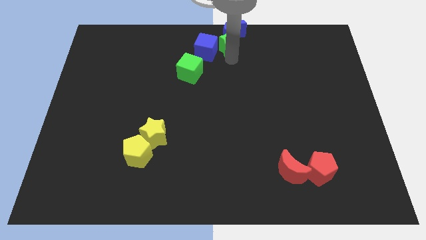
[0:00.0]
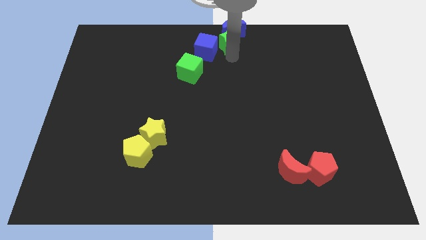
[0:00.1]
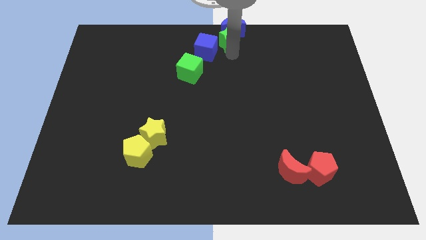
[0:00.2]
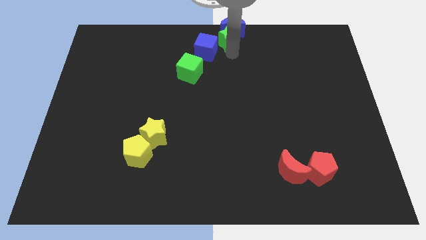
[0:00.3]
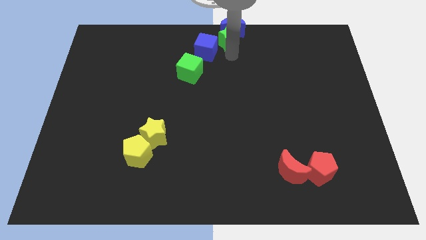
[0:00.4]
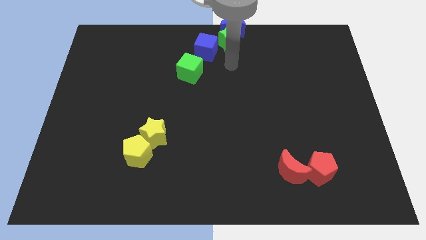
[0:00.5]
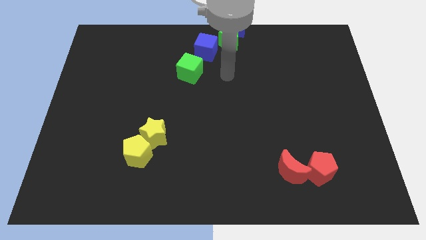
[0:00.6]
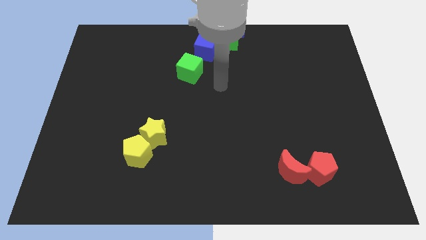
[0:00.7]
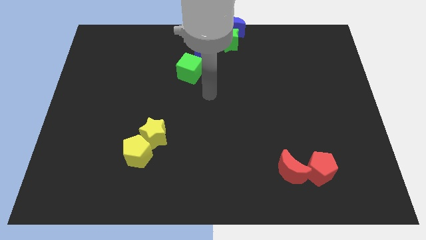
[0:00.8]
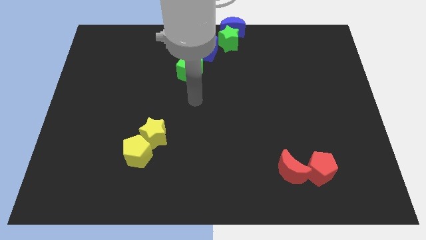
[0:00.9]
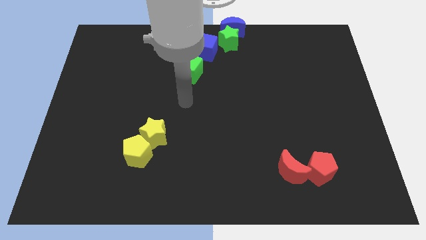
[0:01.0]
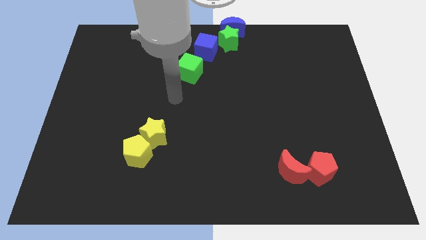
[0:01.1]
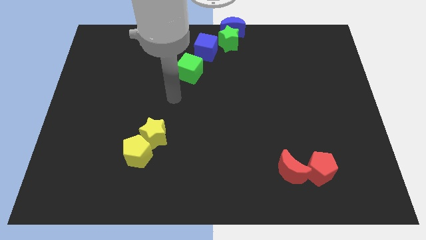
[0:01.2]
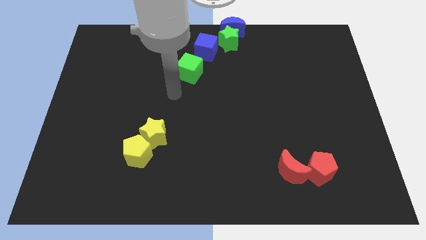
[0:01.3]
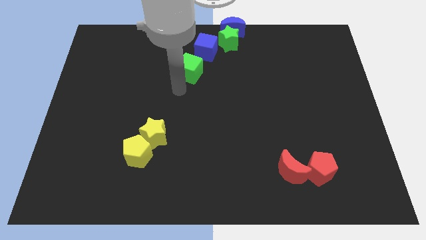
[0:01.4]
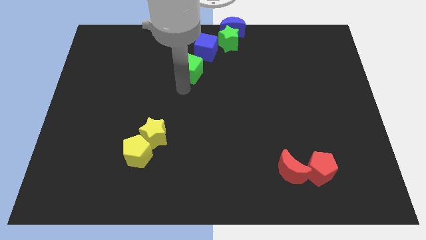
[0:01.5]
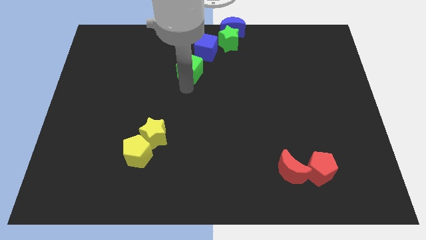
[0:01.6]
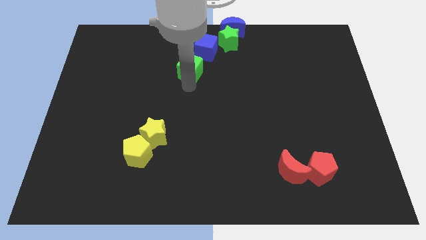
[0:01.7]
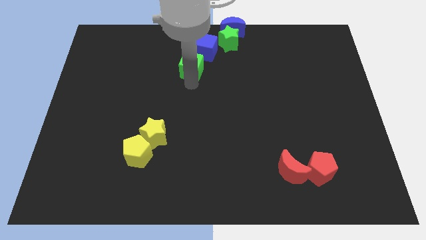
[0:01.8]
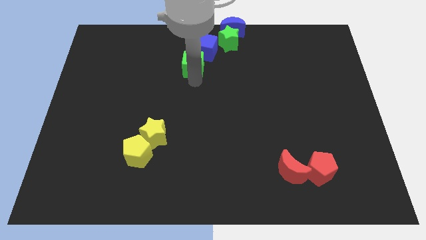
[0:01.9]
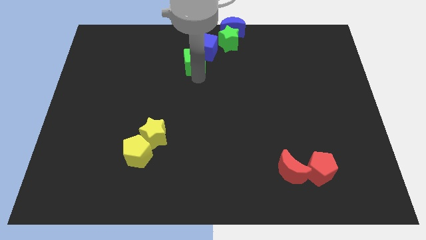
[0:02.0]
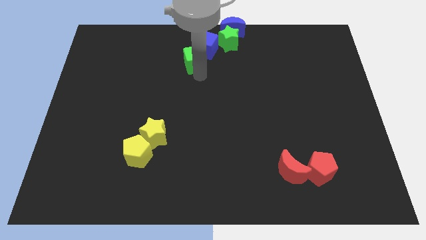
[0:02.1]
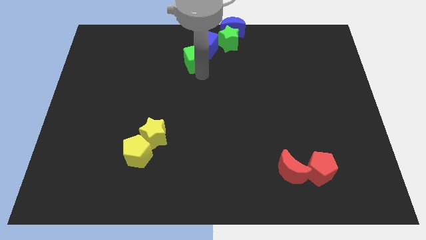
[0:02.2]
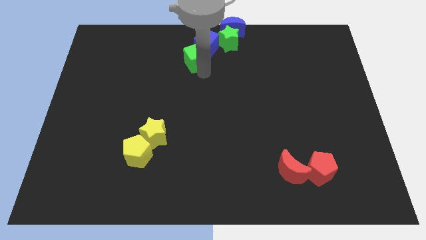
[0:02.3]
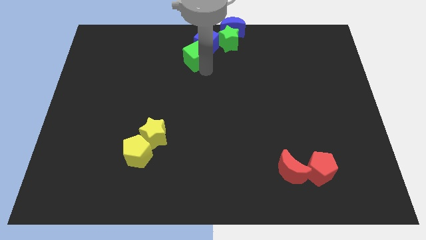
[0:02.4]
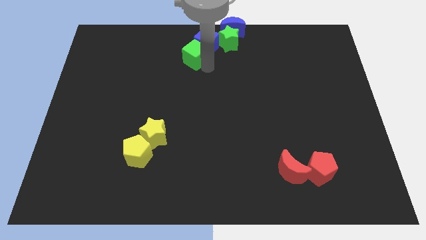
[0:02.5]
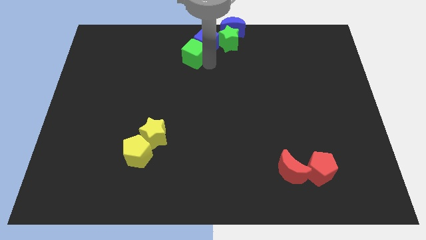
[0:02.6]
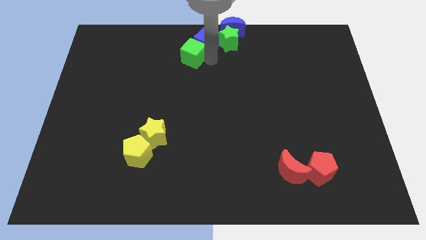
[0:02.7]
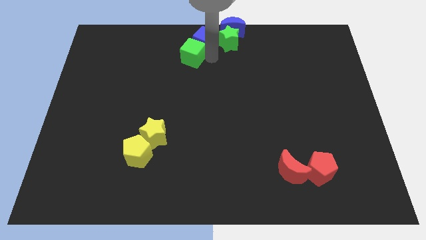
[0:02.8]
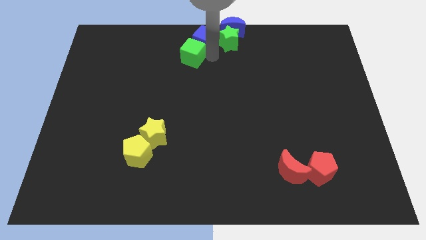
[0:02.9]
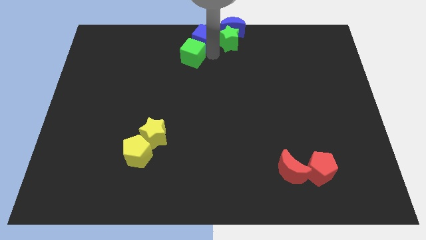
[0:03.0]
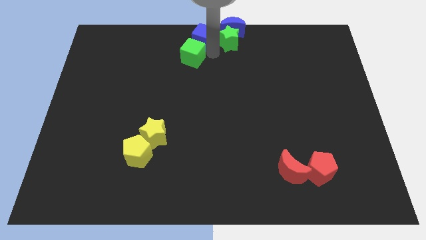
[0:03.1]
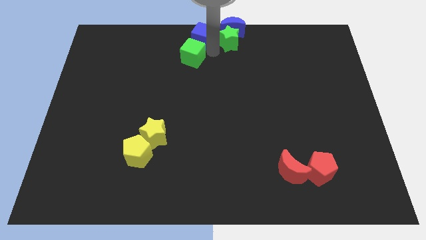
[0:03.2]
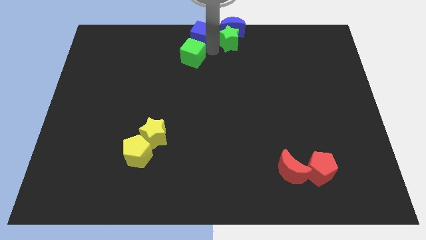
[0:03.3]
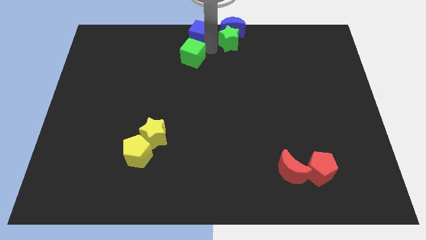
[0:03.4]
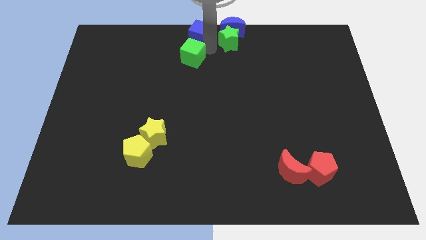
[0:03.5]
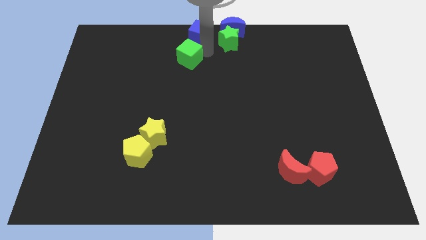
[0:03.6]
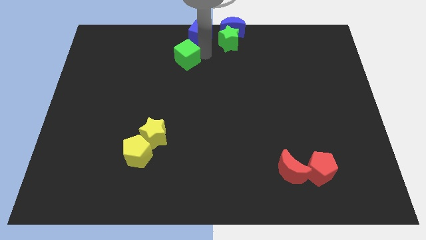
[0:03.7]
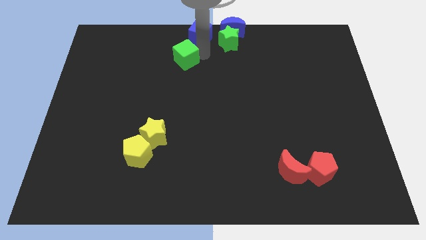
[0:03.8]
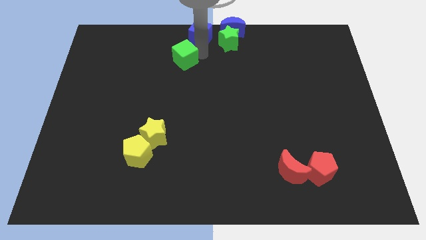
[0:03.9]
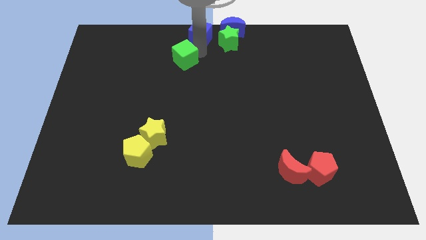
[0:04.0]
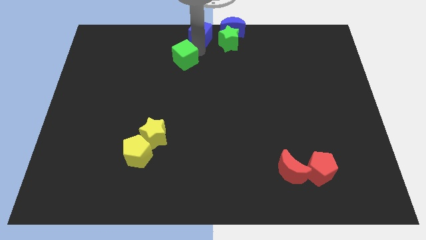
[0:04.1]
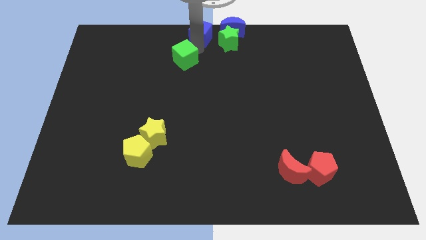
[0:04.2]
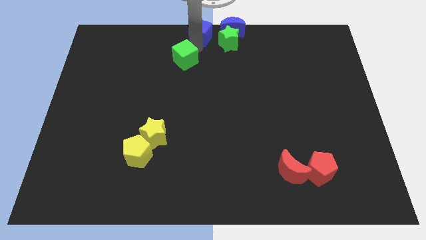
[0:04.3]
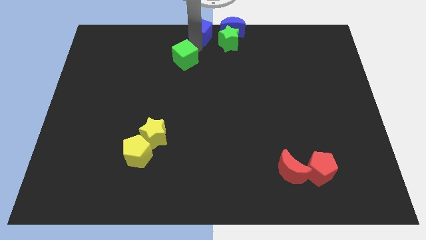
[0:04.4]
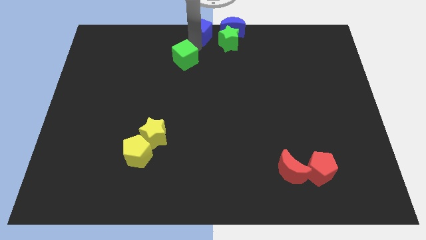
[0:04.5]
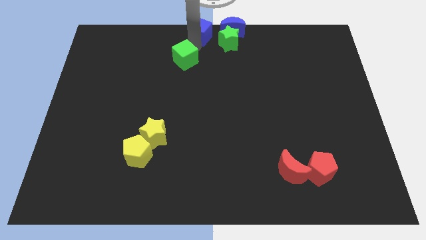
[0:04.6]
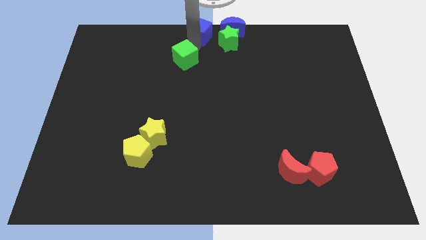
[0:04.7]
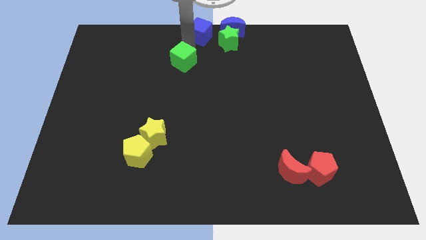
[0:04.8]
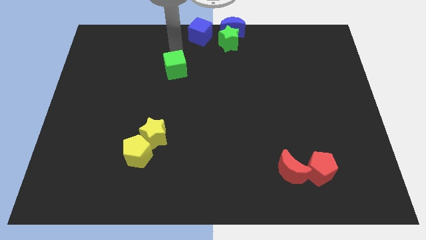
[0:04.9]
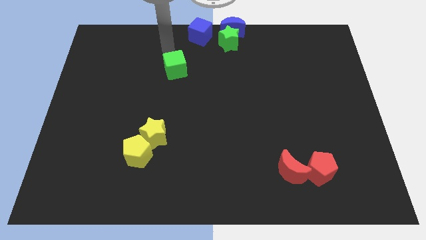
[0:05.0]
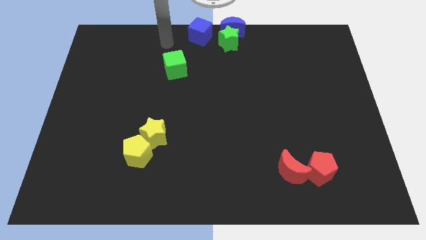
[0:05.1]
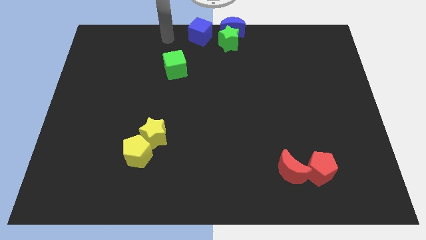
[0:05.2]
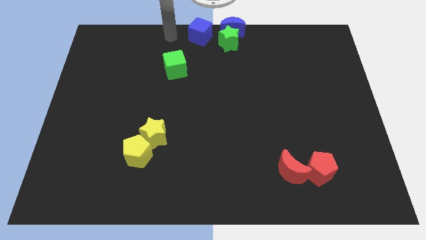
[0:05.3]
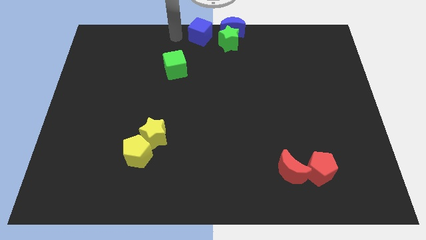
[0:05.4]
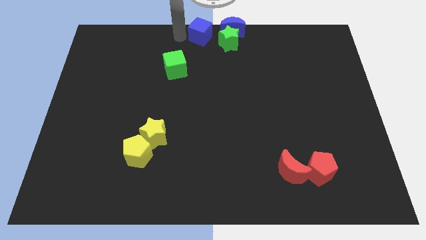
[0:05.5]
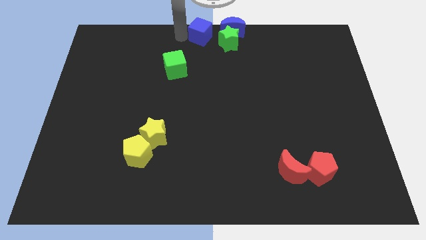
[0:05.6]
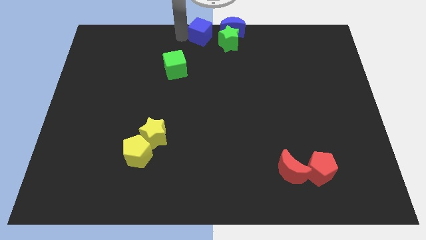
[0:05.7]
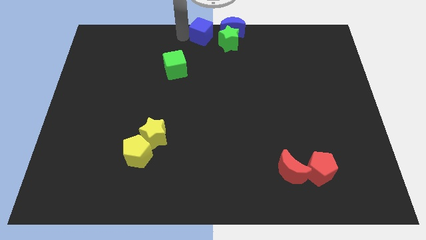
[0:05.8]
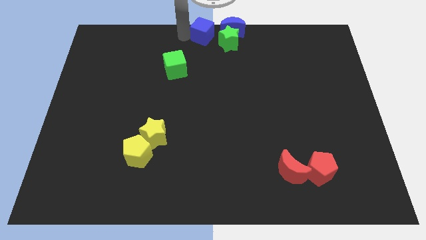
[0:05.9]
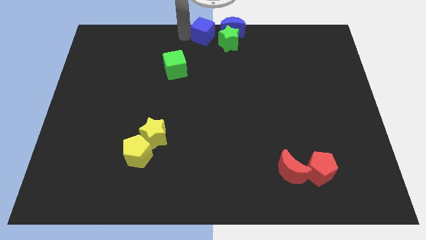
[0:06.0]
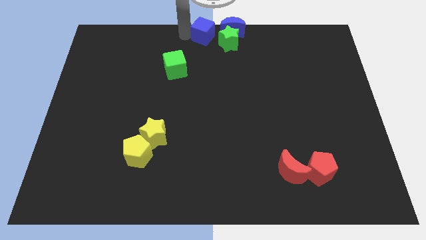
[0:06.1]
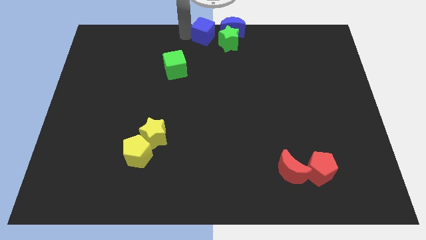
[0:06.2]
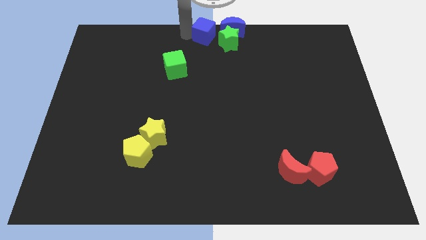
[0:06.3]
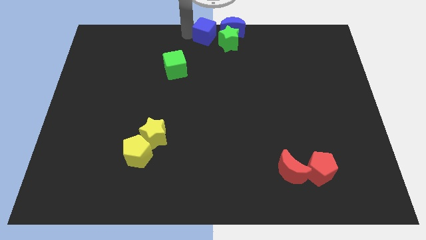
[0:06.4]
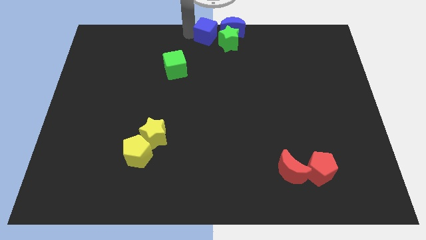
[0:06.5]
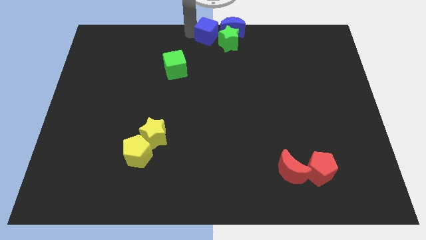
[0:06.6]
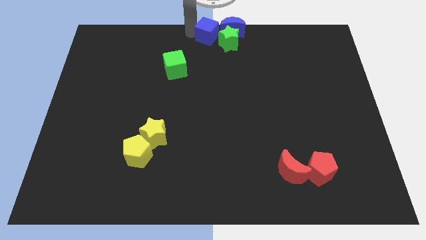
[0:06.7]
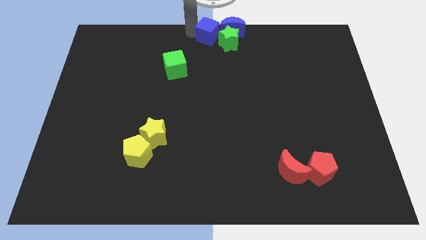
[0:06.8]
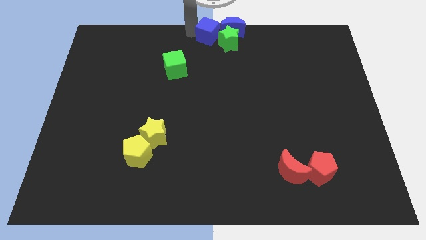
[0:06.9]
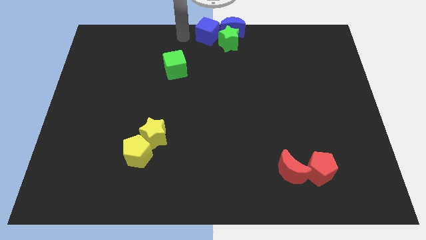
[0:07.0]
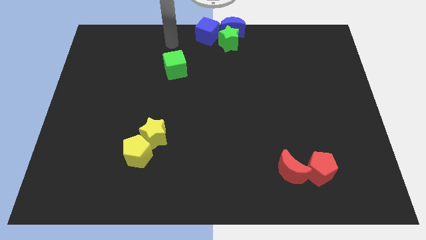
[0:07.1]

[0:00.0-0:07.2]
push group of blocks to the top center of the board

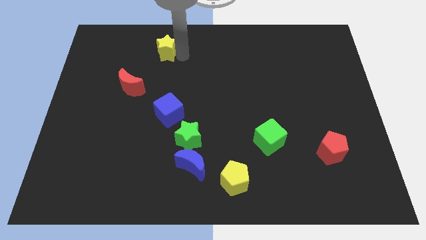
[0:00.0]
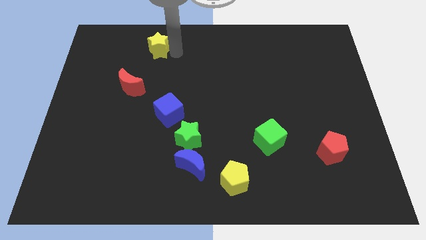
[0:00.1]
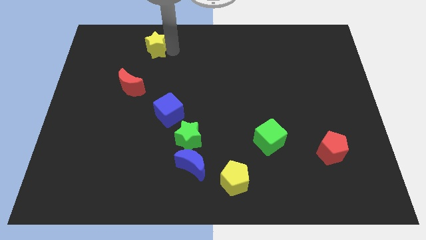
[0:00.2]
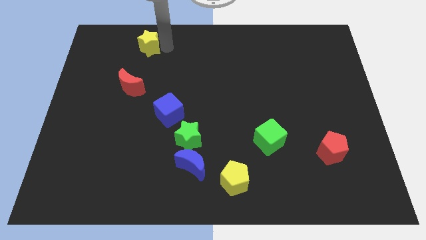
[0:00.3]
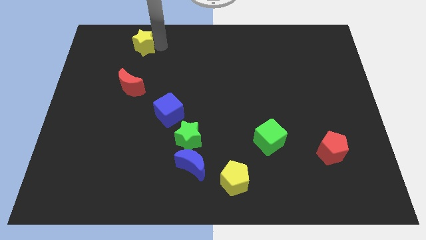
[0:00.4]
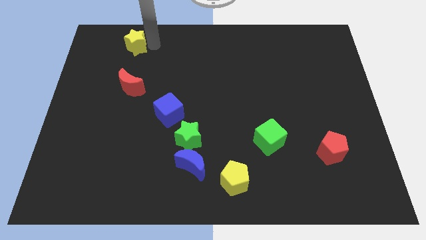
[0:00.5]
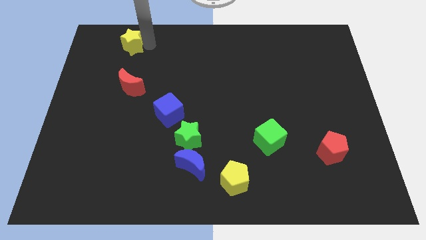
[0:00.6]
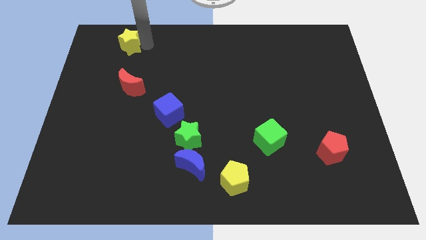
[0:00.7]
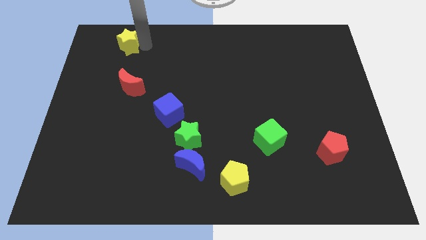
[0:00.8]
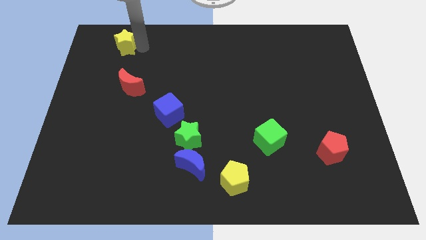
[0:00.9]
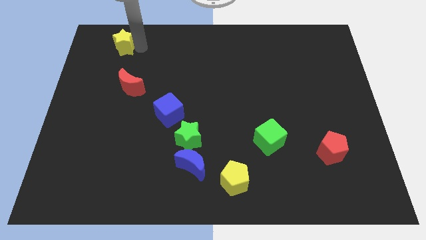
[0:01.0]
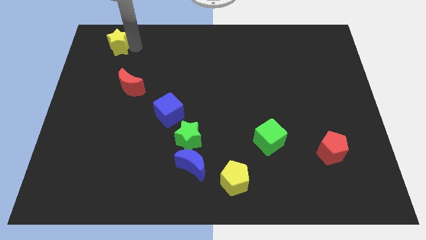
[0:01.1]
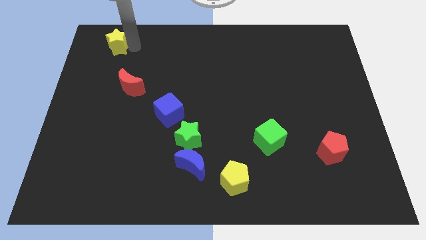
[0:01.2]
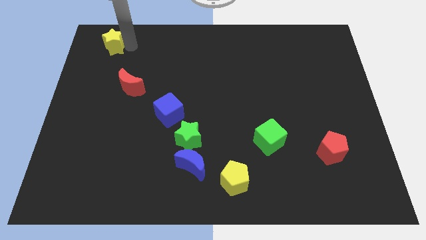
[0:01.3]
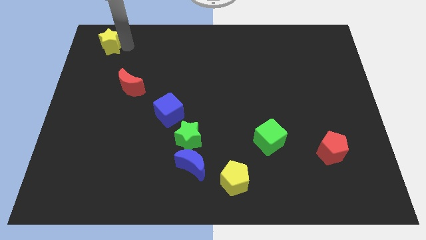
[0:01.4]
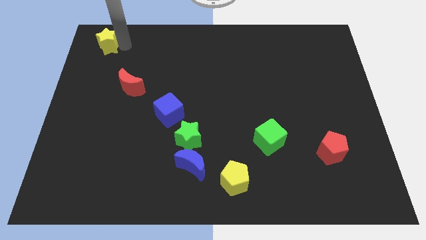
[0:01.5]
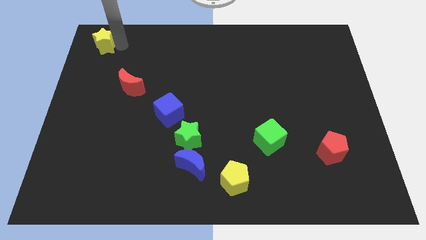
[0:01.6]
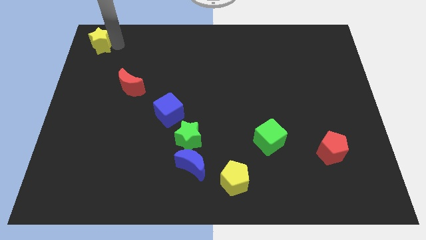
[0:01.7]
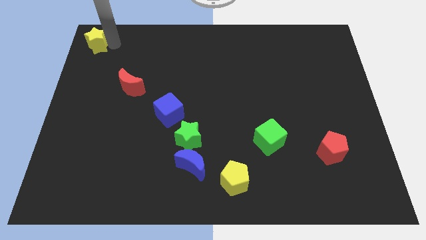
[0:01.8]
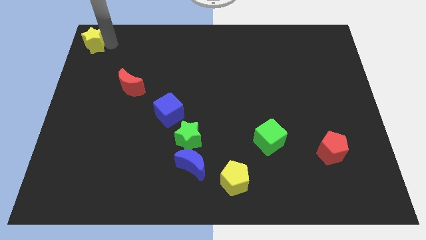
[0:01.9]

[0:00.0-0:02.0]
move the yellow star to the top left corner of the board
